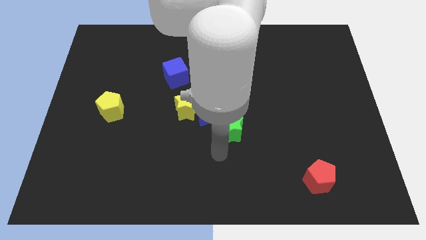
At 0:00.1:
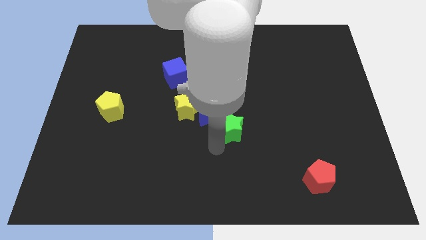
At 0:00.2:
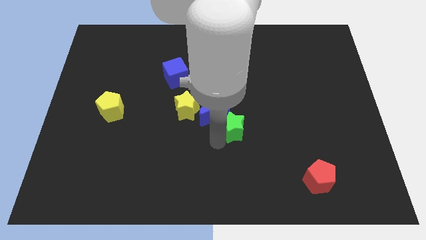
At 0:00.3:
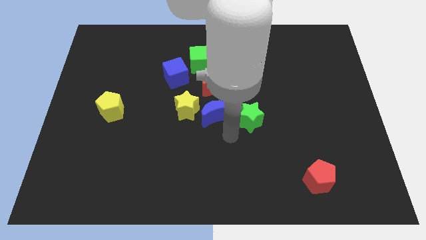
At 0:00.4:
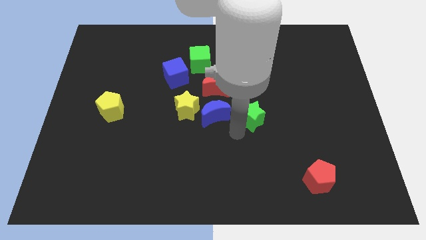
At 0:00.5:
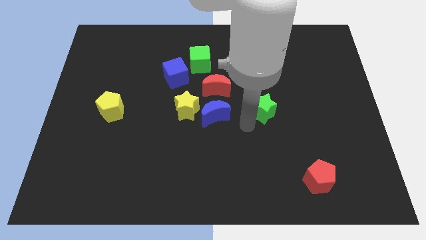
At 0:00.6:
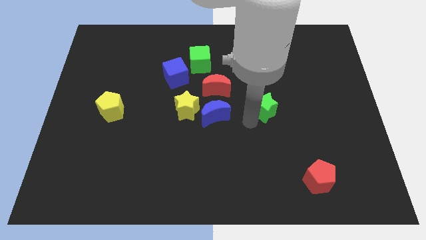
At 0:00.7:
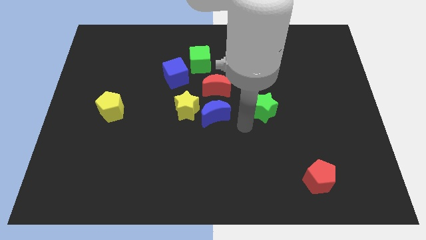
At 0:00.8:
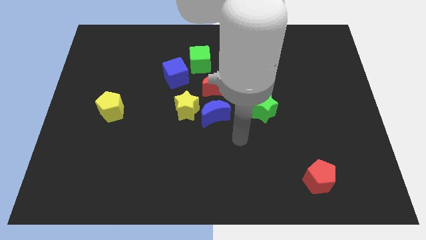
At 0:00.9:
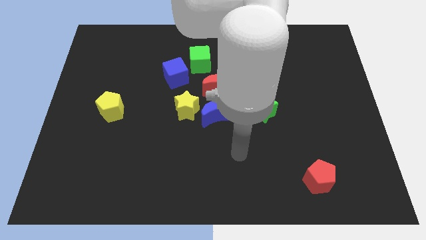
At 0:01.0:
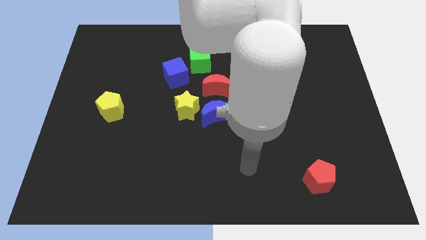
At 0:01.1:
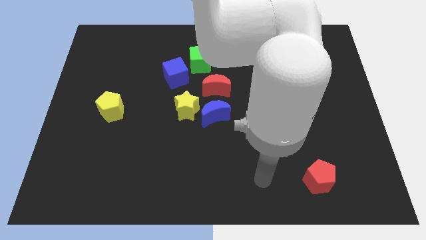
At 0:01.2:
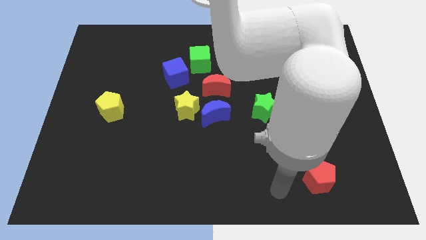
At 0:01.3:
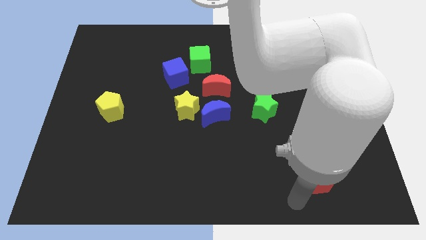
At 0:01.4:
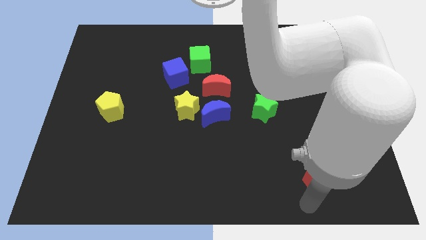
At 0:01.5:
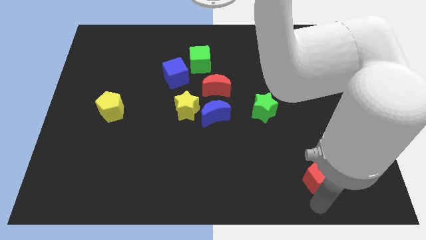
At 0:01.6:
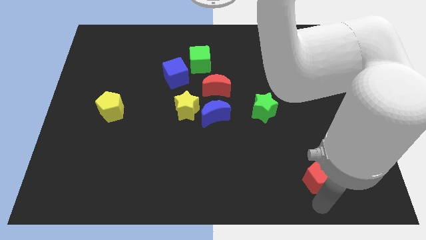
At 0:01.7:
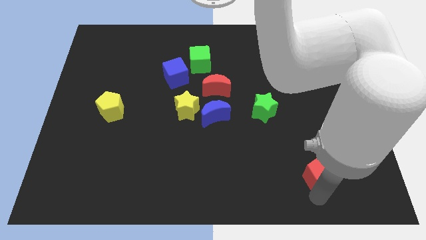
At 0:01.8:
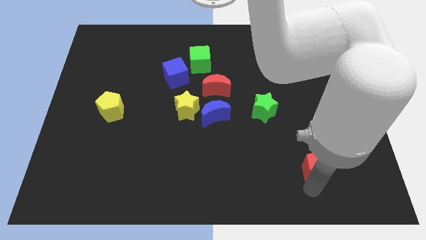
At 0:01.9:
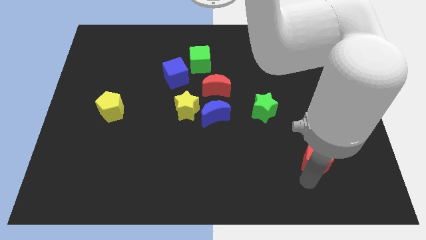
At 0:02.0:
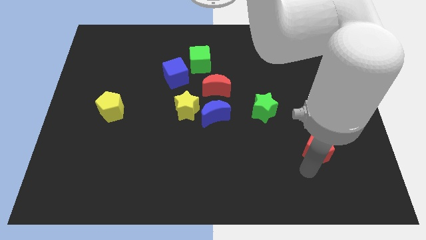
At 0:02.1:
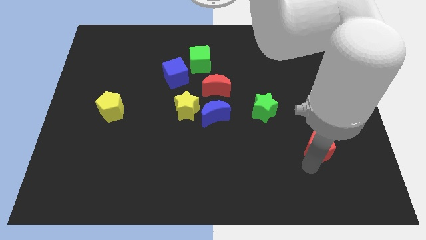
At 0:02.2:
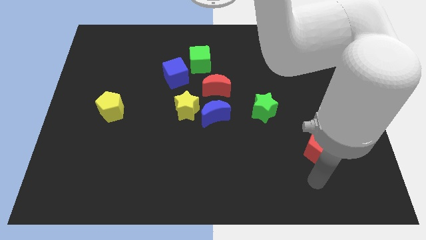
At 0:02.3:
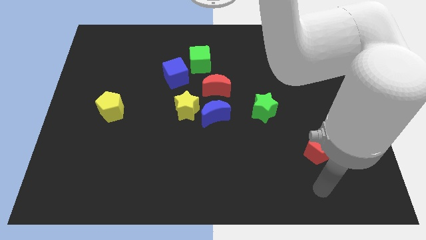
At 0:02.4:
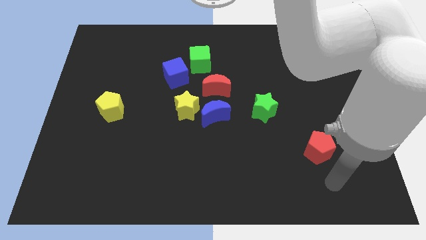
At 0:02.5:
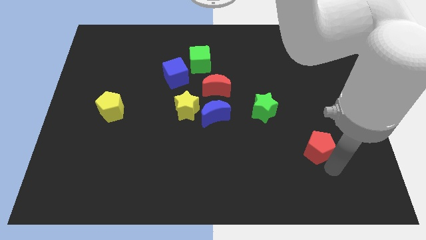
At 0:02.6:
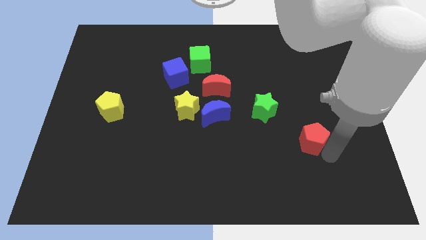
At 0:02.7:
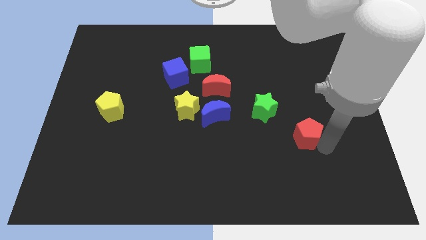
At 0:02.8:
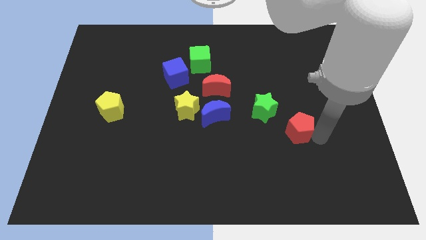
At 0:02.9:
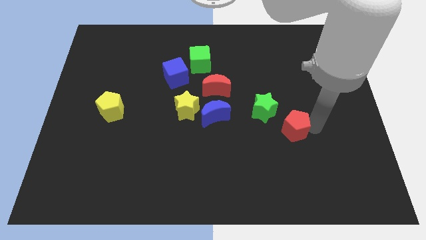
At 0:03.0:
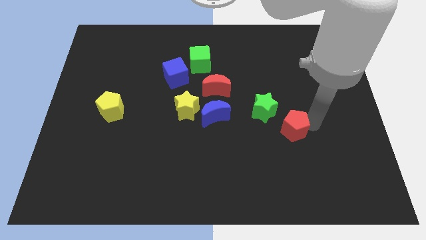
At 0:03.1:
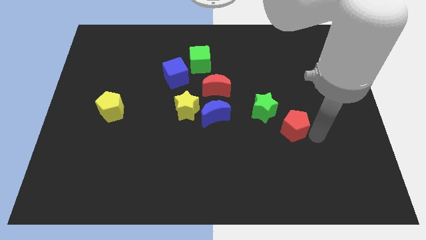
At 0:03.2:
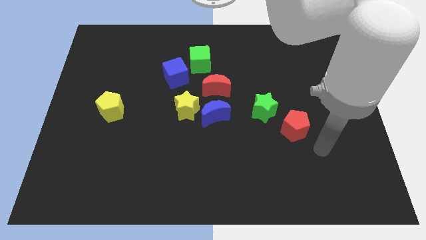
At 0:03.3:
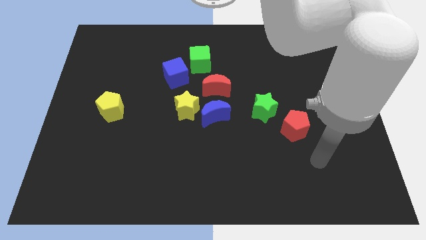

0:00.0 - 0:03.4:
slide the red pentagon towards the green star

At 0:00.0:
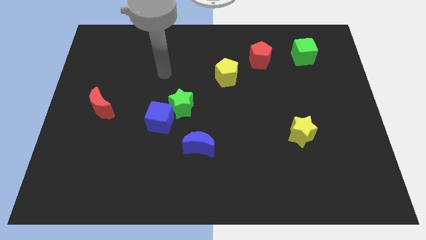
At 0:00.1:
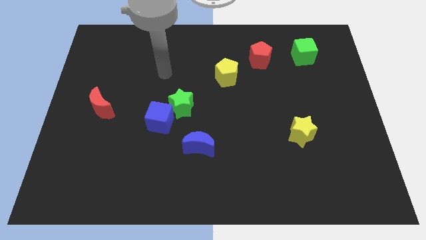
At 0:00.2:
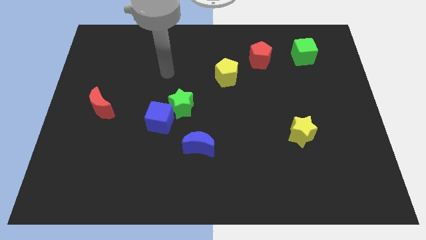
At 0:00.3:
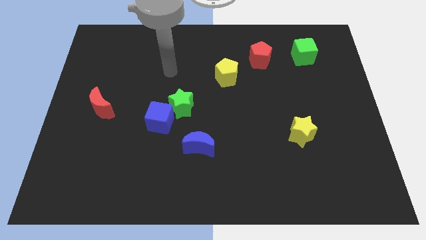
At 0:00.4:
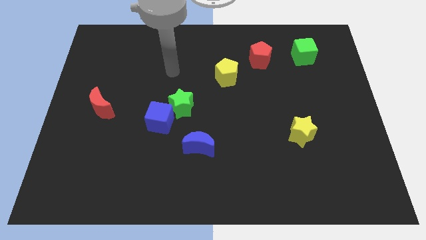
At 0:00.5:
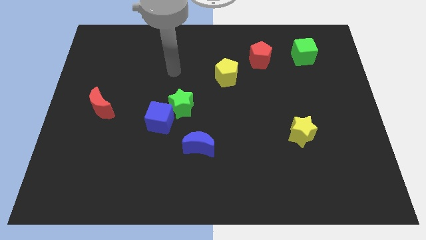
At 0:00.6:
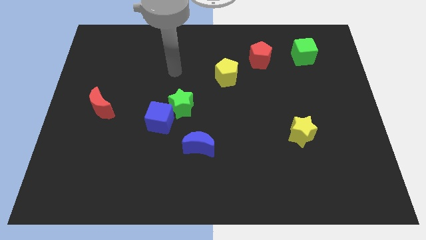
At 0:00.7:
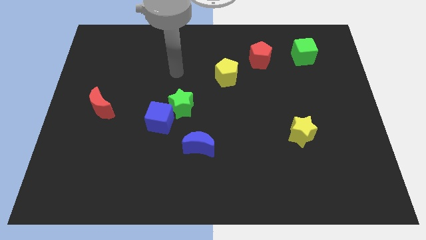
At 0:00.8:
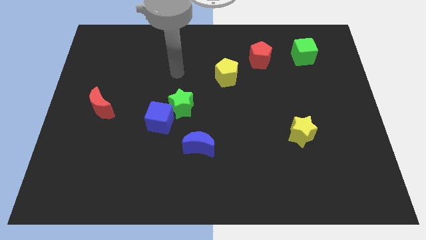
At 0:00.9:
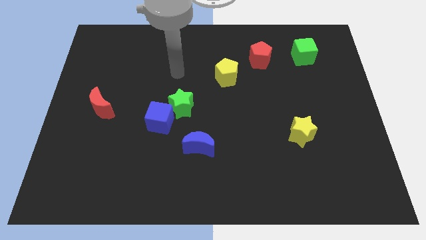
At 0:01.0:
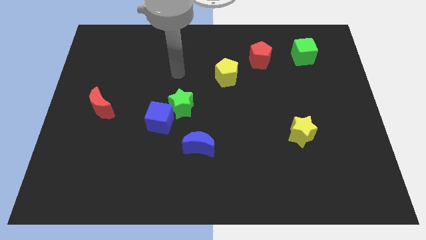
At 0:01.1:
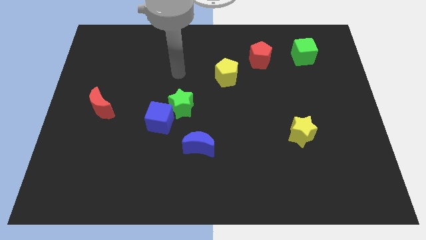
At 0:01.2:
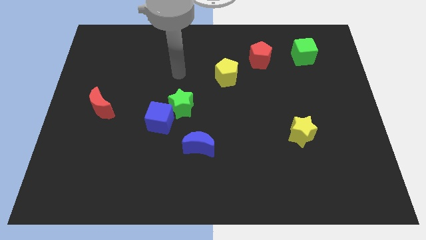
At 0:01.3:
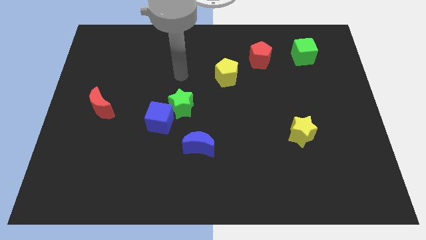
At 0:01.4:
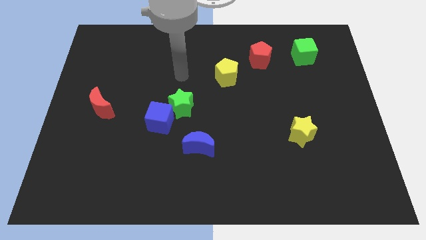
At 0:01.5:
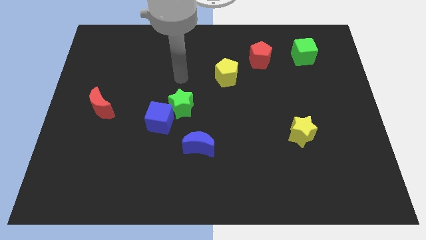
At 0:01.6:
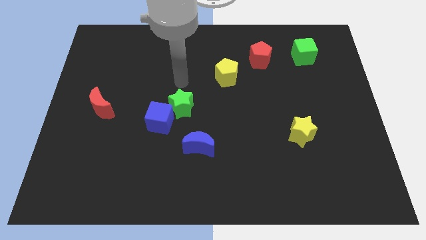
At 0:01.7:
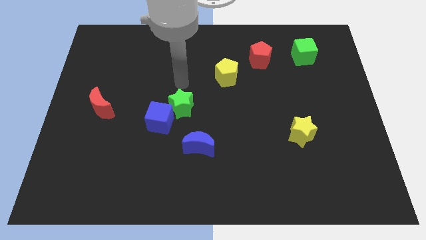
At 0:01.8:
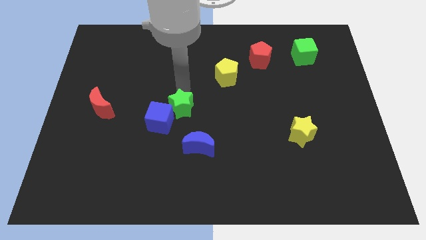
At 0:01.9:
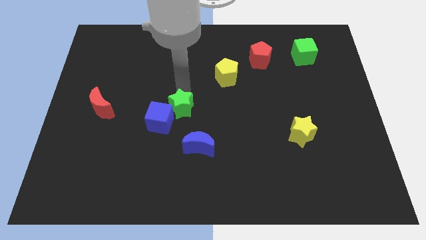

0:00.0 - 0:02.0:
move your arm towards the green star

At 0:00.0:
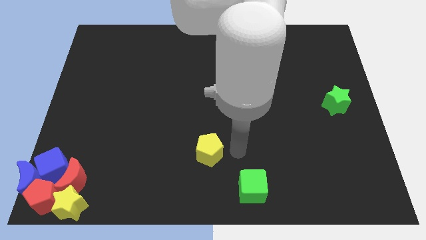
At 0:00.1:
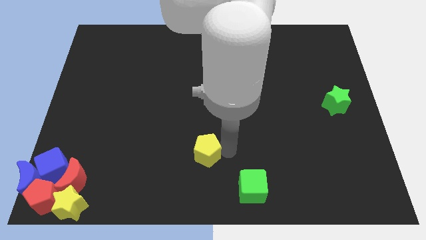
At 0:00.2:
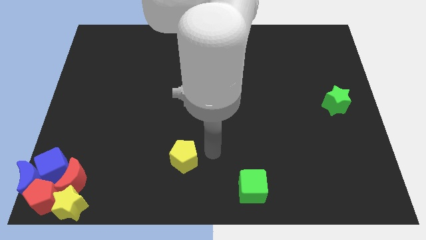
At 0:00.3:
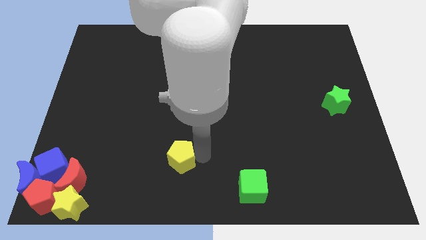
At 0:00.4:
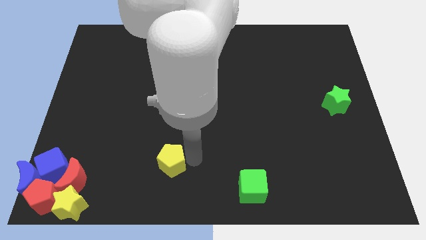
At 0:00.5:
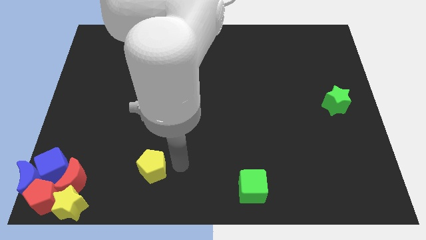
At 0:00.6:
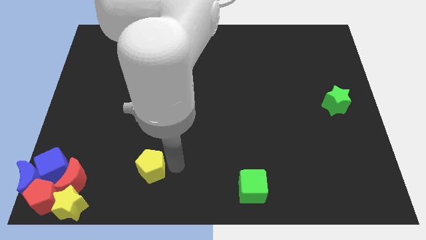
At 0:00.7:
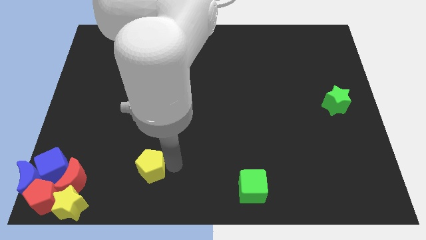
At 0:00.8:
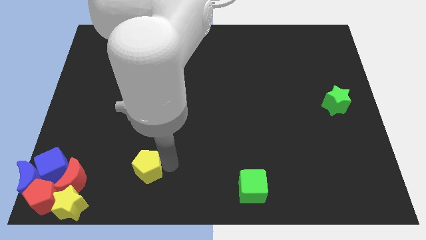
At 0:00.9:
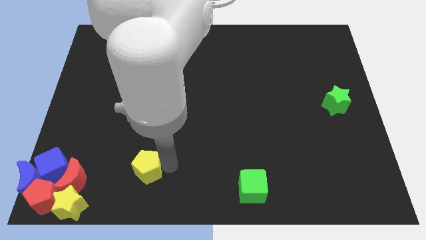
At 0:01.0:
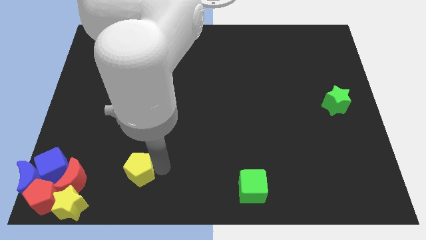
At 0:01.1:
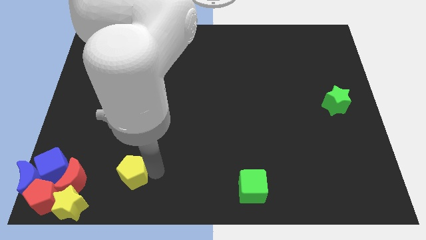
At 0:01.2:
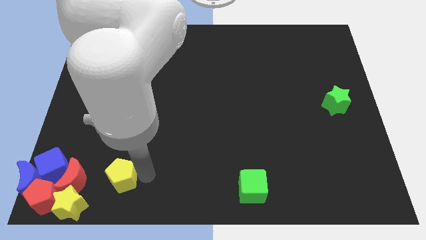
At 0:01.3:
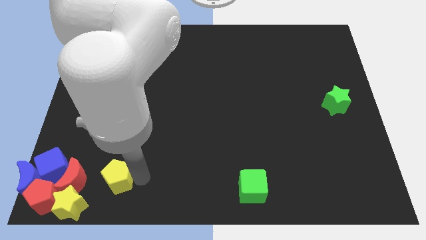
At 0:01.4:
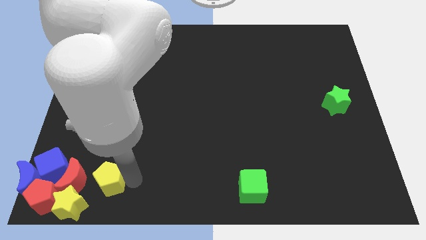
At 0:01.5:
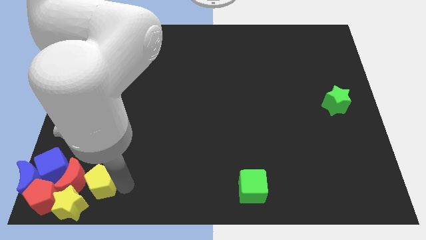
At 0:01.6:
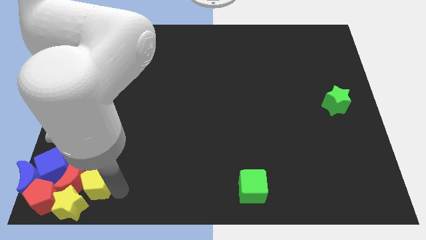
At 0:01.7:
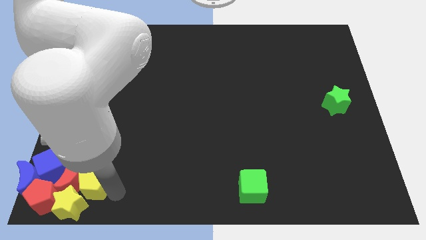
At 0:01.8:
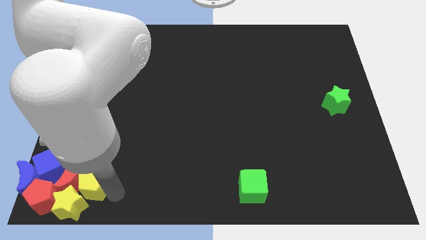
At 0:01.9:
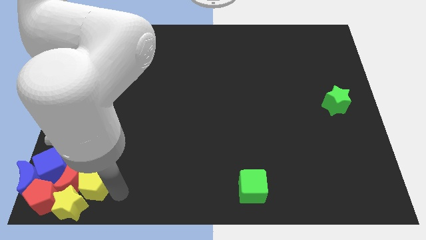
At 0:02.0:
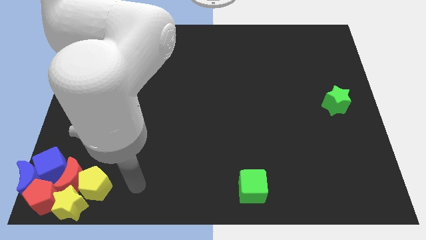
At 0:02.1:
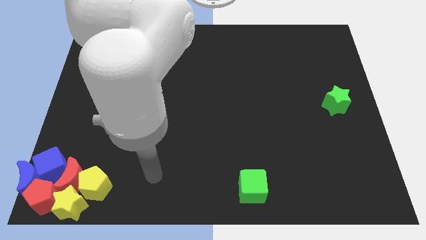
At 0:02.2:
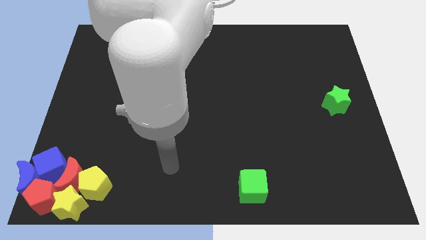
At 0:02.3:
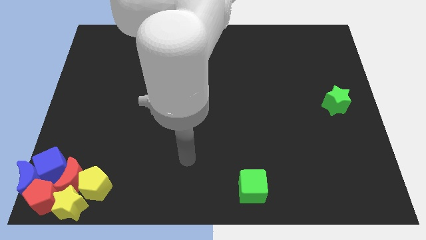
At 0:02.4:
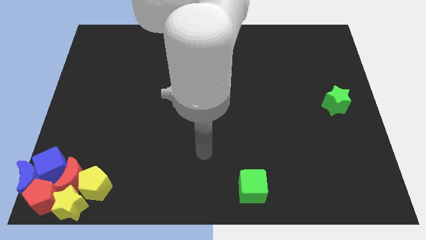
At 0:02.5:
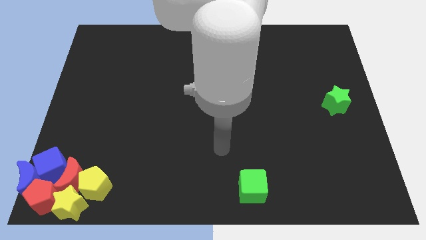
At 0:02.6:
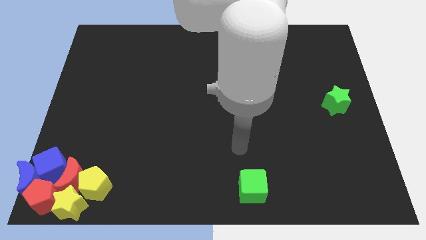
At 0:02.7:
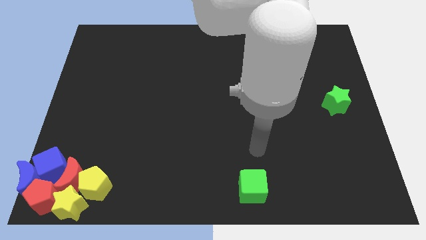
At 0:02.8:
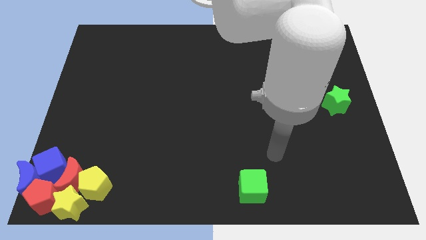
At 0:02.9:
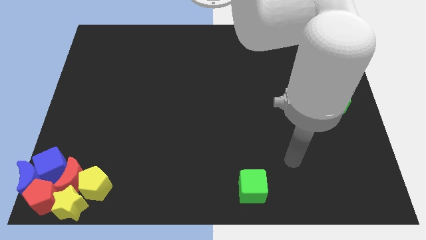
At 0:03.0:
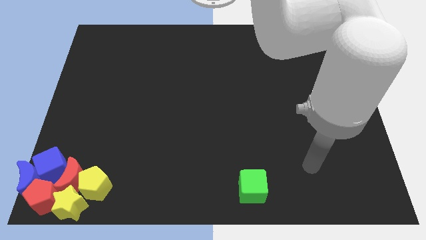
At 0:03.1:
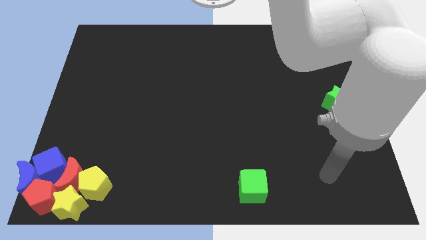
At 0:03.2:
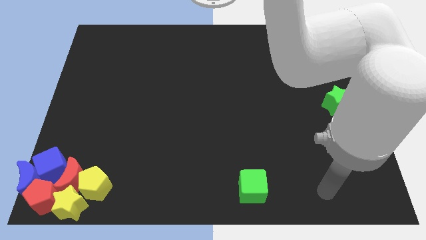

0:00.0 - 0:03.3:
move the yellow pentagon to the top right of the yellow star

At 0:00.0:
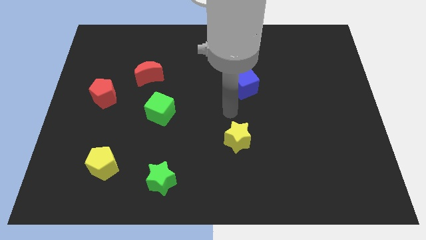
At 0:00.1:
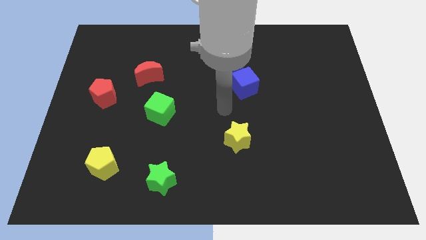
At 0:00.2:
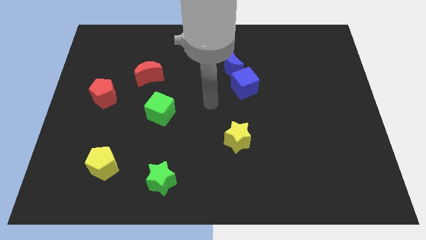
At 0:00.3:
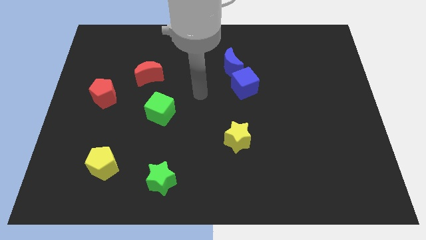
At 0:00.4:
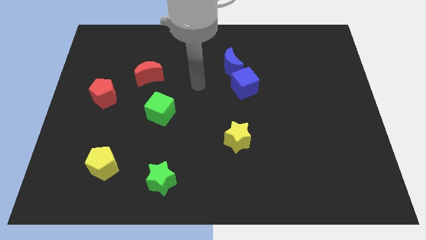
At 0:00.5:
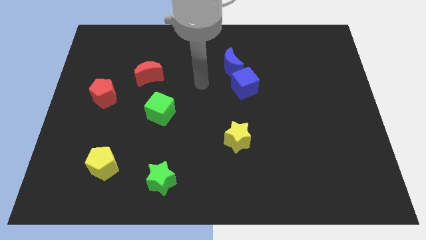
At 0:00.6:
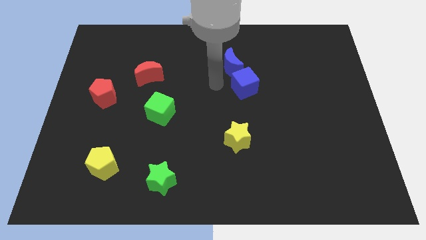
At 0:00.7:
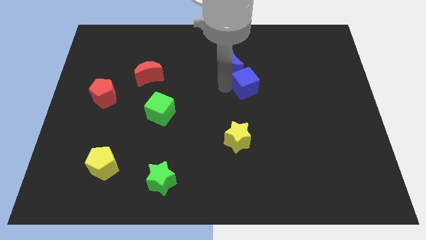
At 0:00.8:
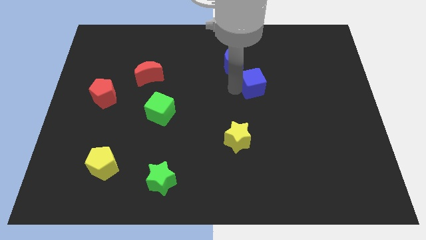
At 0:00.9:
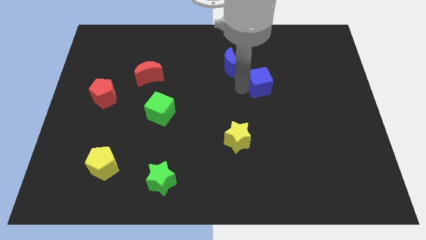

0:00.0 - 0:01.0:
move your arm towards the blue cube
